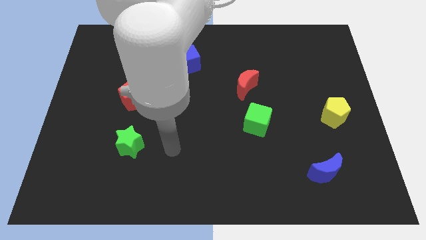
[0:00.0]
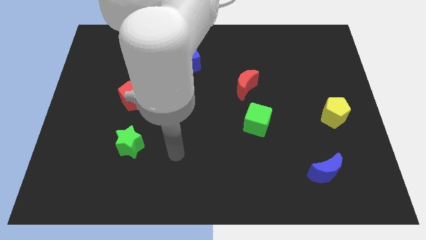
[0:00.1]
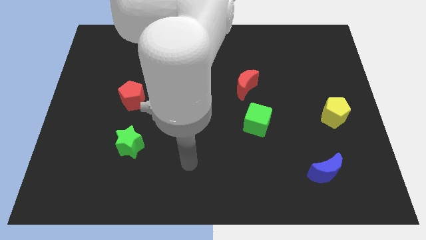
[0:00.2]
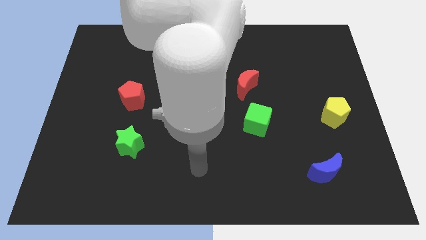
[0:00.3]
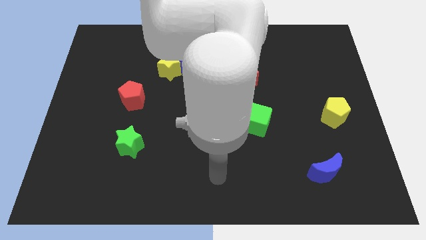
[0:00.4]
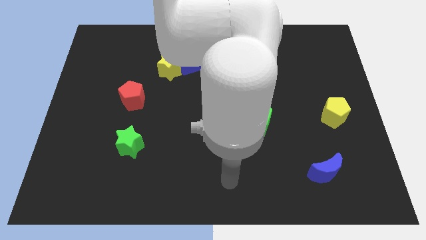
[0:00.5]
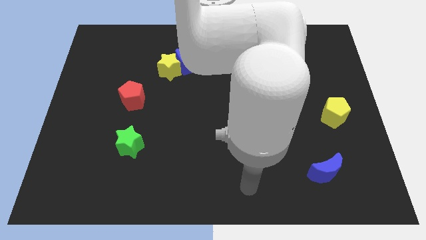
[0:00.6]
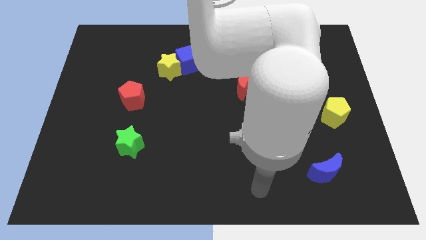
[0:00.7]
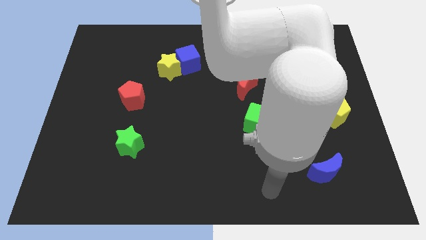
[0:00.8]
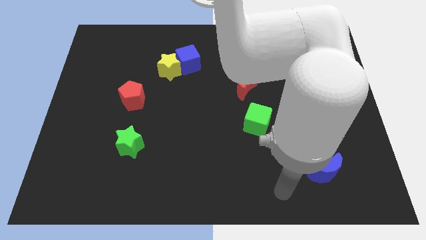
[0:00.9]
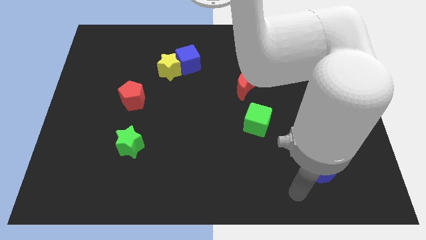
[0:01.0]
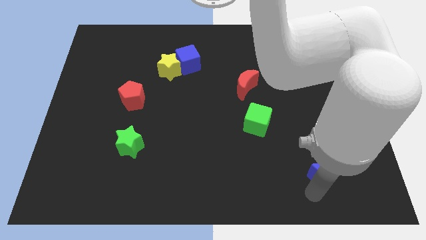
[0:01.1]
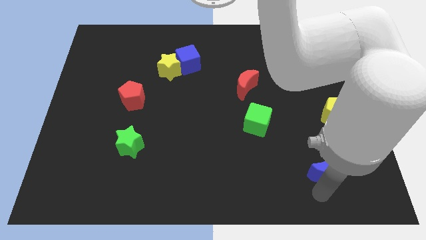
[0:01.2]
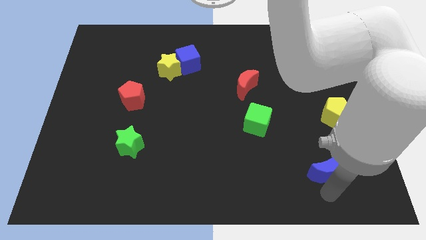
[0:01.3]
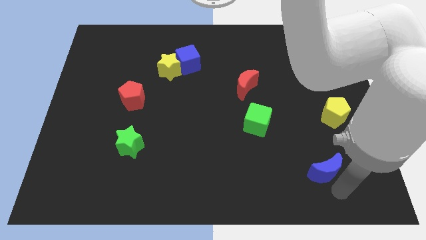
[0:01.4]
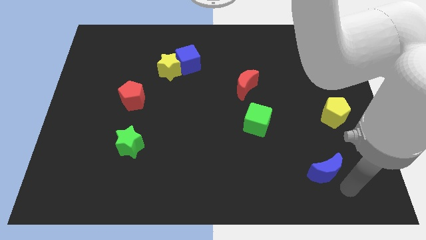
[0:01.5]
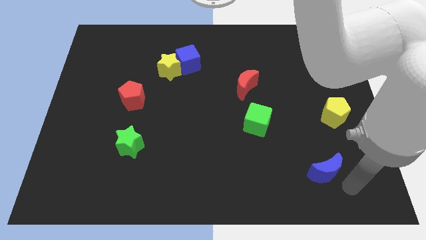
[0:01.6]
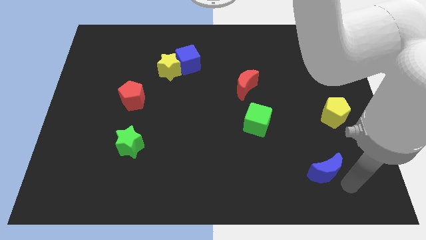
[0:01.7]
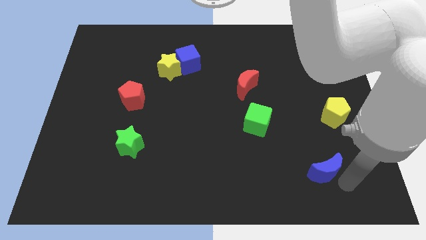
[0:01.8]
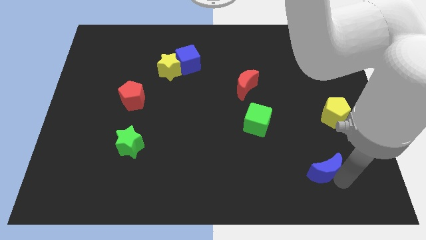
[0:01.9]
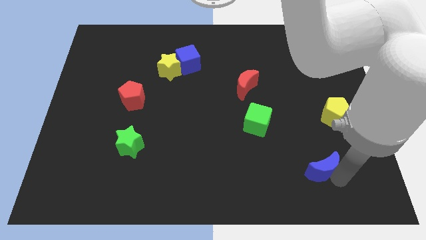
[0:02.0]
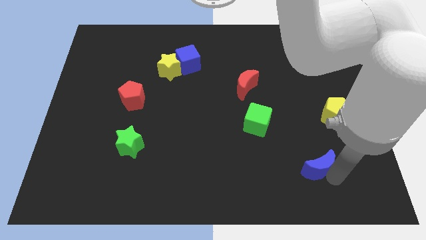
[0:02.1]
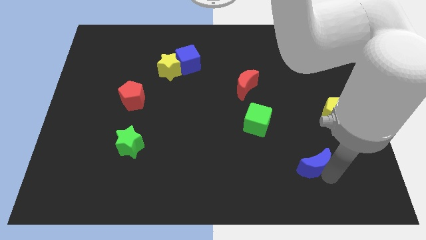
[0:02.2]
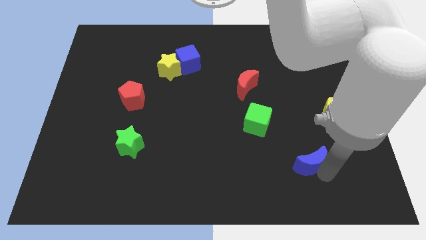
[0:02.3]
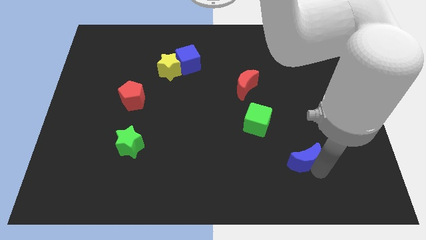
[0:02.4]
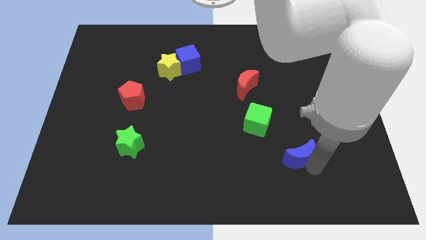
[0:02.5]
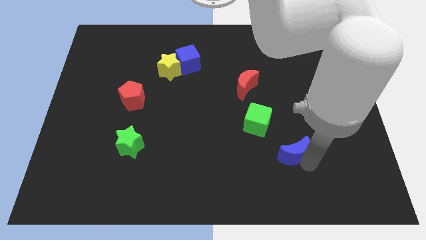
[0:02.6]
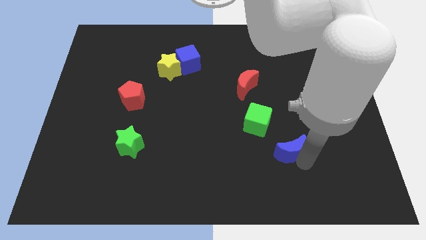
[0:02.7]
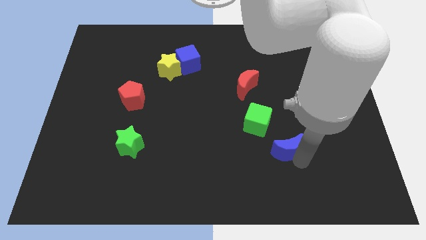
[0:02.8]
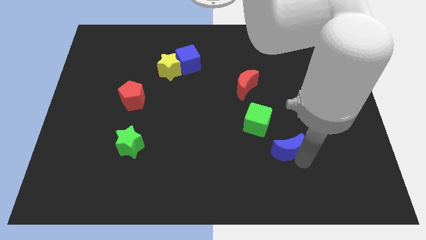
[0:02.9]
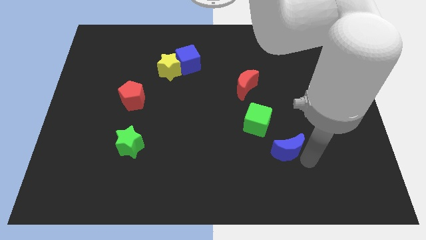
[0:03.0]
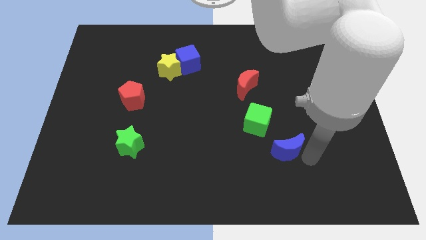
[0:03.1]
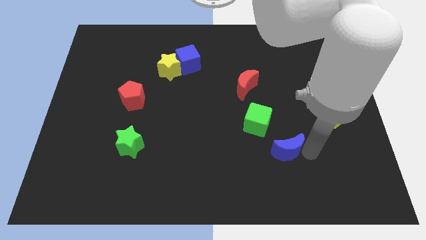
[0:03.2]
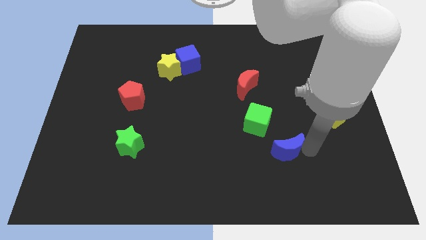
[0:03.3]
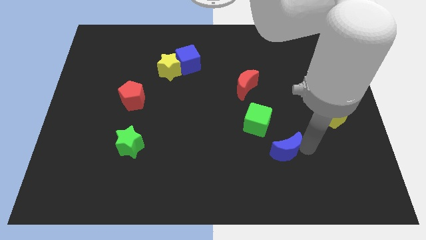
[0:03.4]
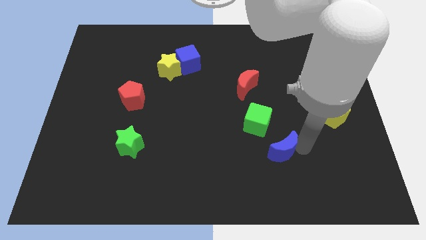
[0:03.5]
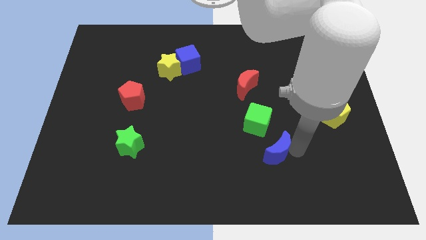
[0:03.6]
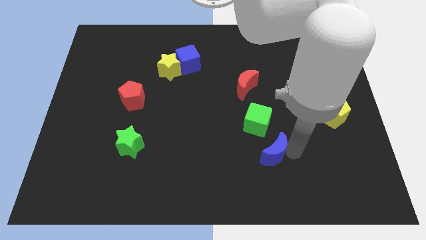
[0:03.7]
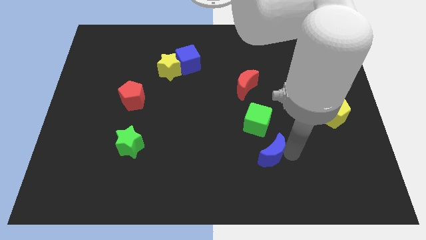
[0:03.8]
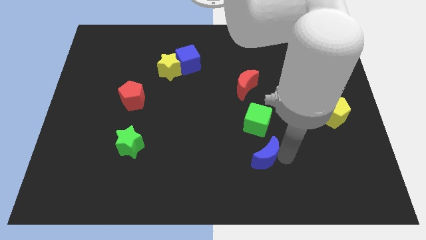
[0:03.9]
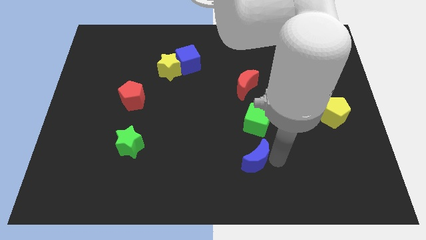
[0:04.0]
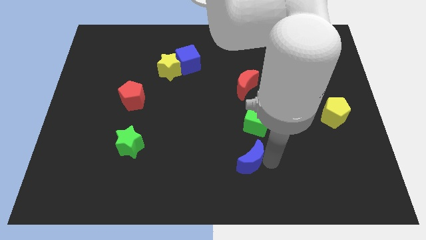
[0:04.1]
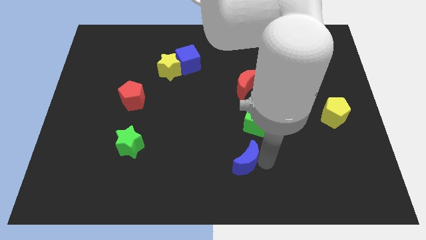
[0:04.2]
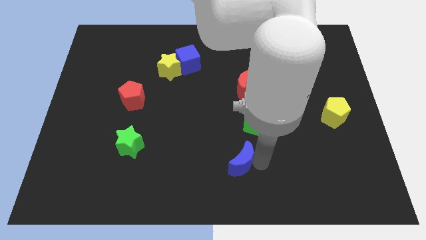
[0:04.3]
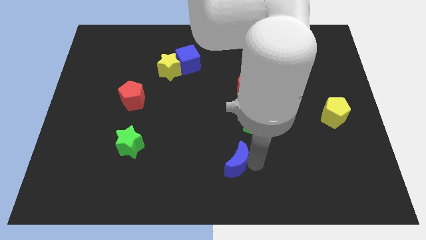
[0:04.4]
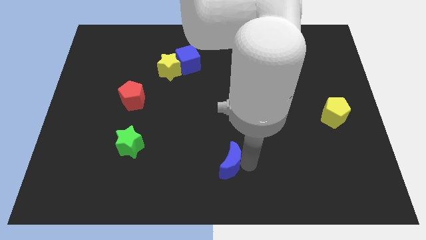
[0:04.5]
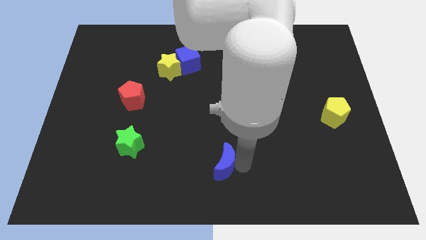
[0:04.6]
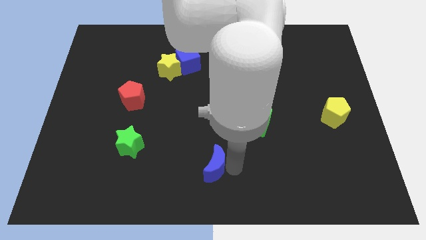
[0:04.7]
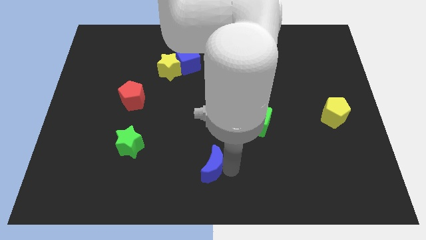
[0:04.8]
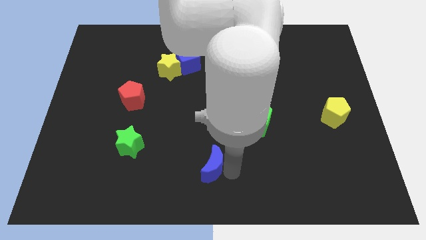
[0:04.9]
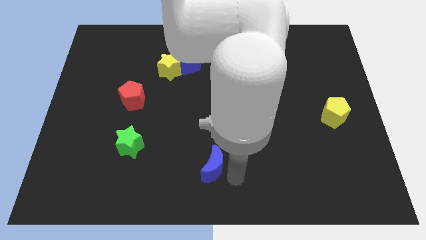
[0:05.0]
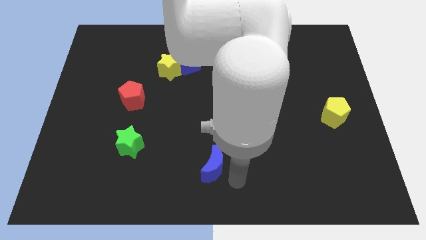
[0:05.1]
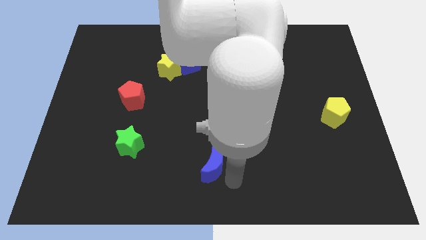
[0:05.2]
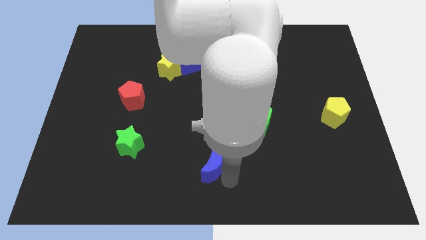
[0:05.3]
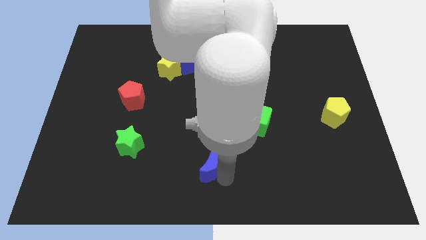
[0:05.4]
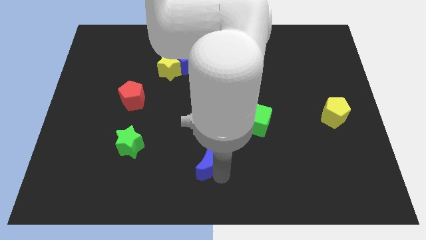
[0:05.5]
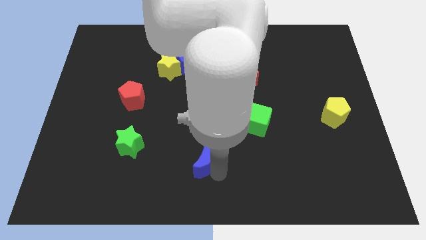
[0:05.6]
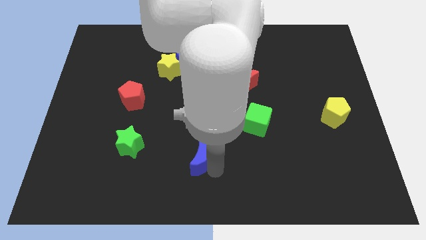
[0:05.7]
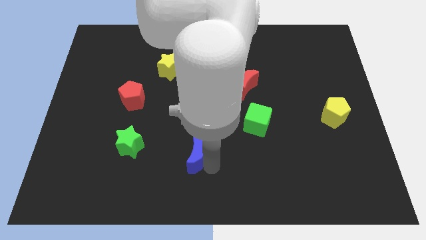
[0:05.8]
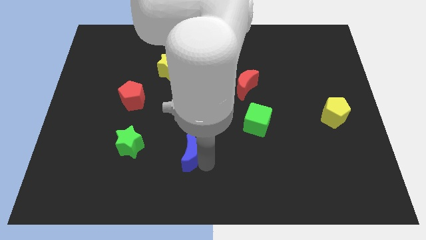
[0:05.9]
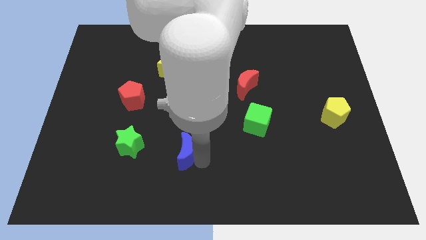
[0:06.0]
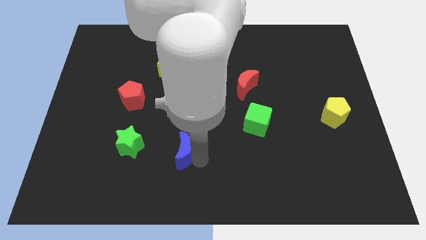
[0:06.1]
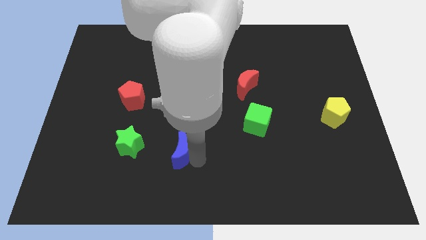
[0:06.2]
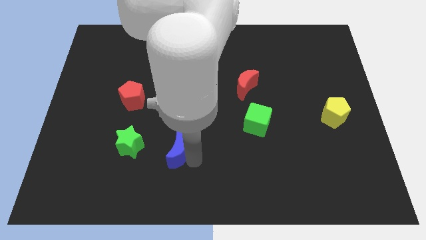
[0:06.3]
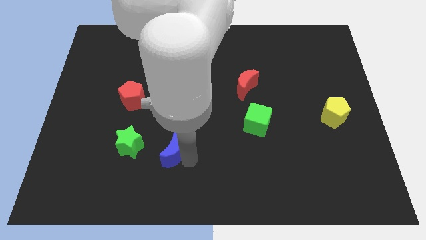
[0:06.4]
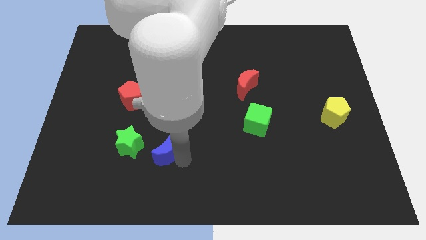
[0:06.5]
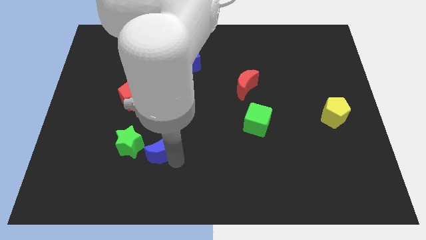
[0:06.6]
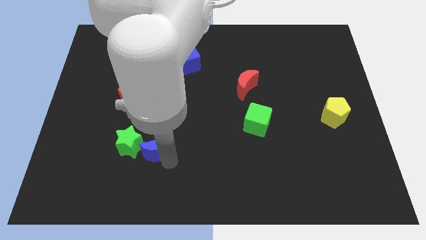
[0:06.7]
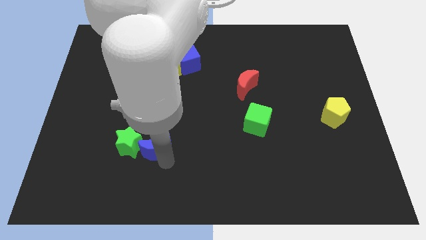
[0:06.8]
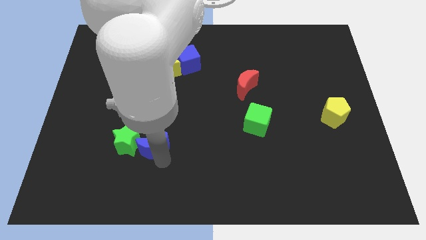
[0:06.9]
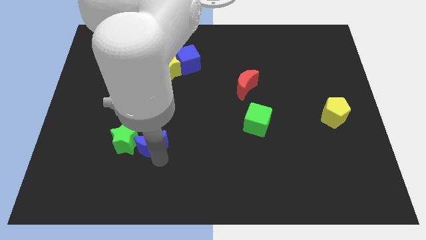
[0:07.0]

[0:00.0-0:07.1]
put the blue moon close to the green star

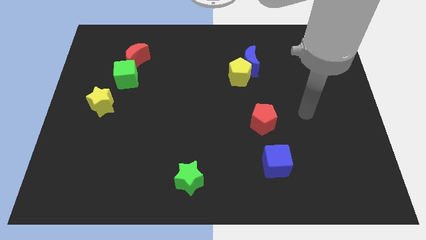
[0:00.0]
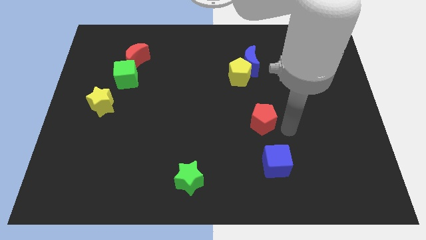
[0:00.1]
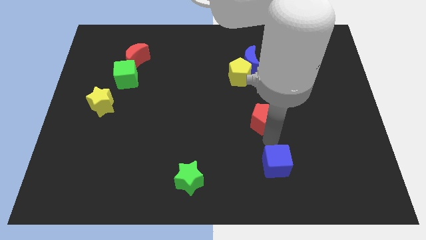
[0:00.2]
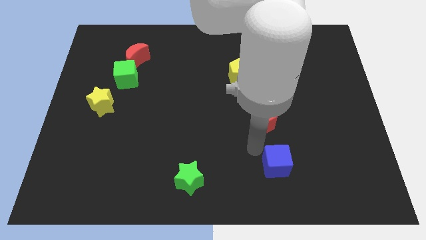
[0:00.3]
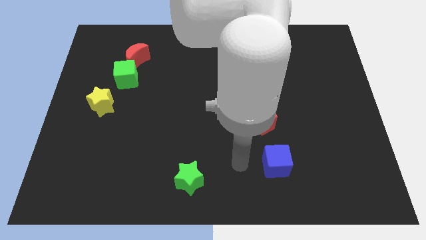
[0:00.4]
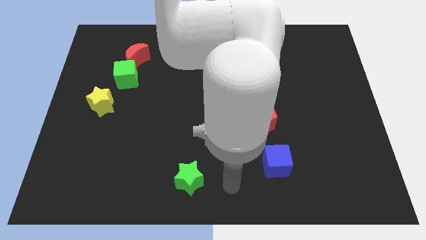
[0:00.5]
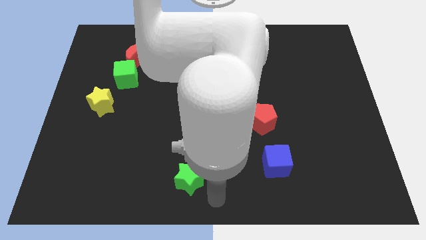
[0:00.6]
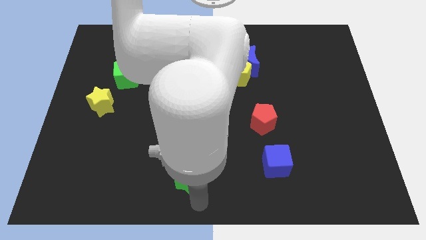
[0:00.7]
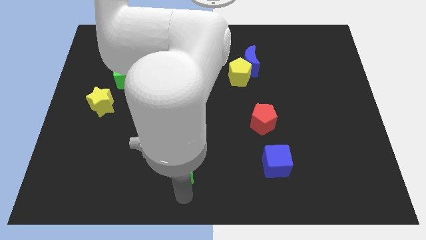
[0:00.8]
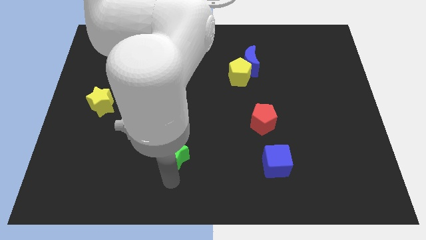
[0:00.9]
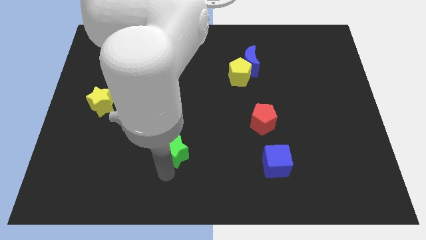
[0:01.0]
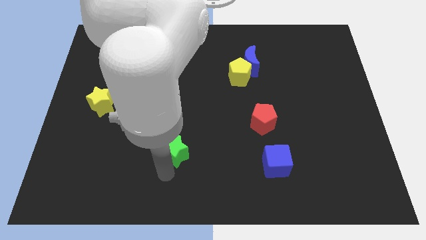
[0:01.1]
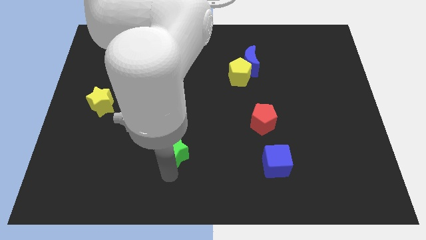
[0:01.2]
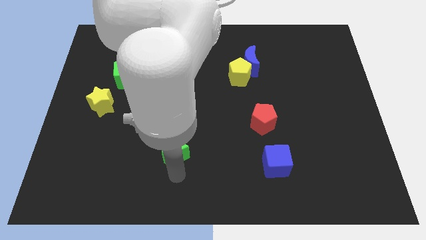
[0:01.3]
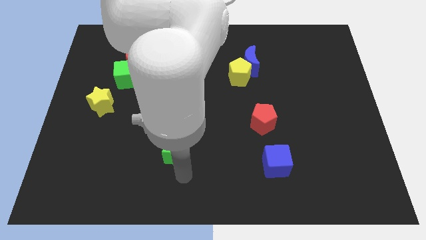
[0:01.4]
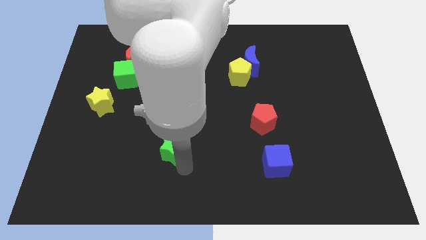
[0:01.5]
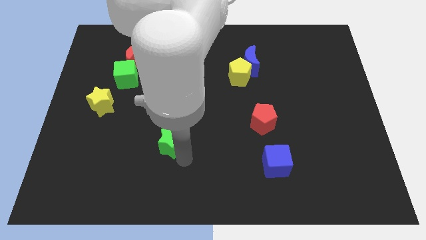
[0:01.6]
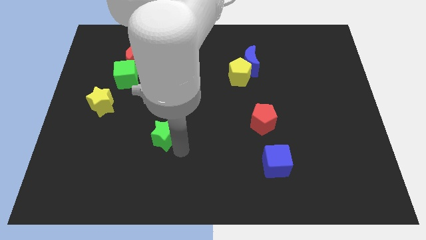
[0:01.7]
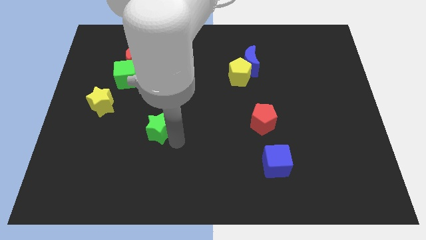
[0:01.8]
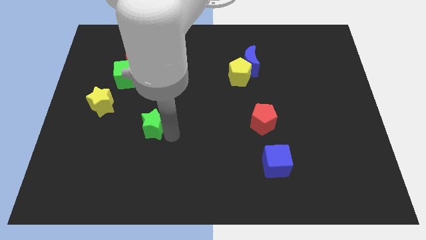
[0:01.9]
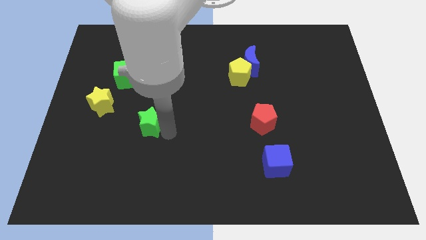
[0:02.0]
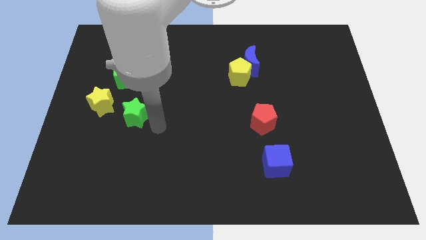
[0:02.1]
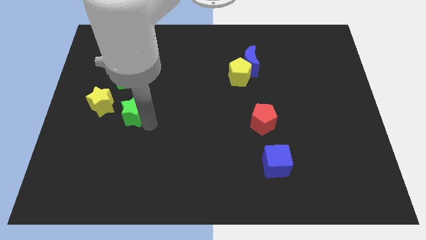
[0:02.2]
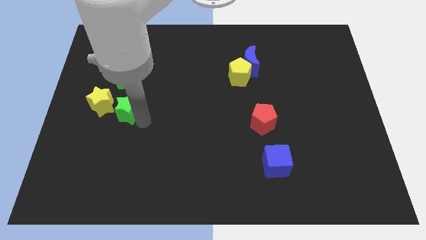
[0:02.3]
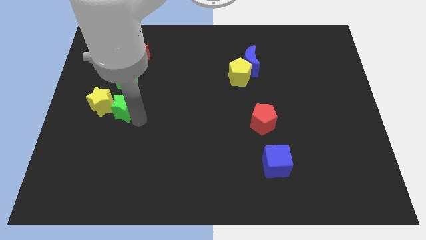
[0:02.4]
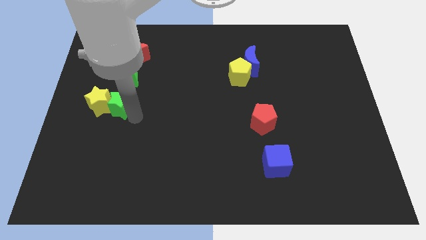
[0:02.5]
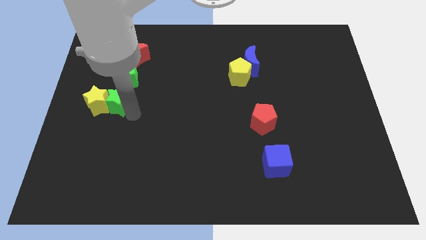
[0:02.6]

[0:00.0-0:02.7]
move the green star next to the yellow star
